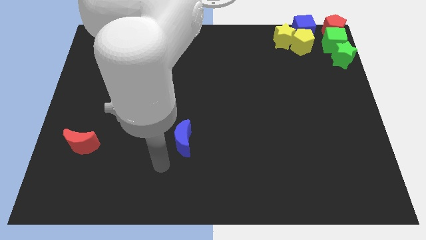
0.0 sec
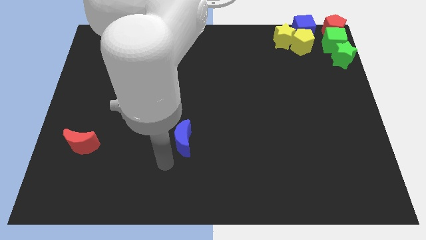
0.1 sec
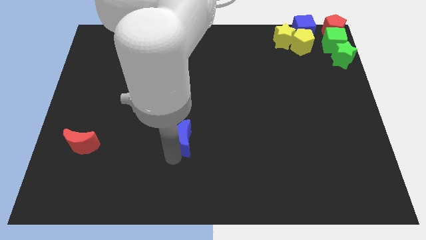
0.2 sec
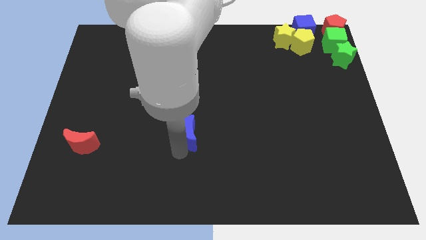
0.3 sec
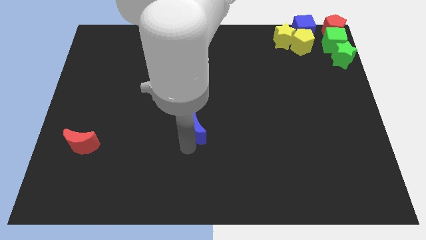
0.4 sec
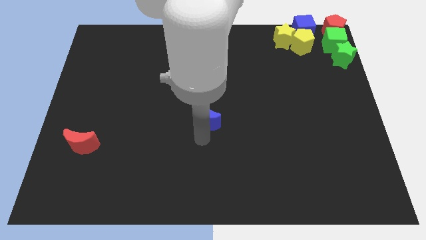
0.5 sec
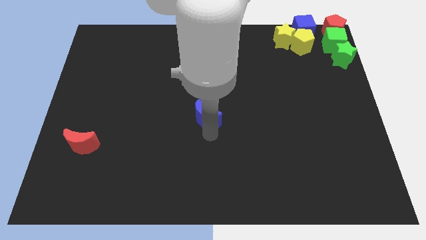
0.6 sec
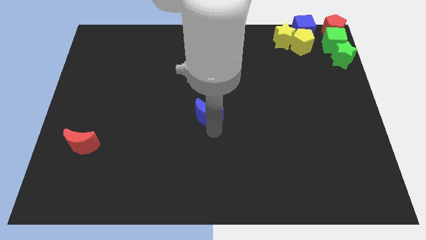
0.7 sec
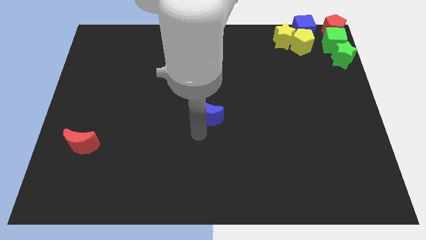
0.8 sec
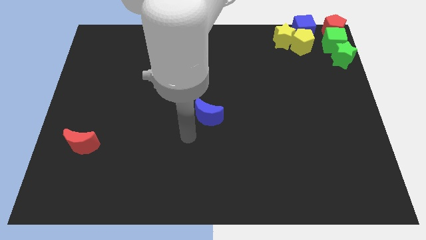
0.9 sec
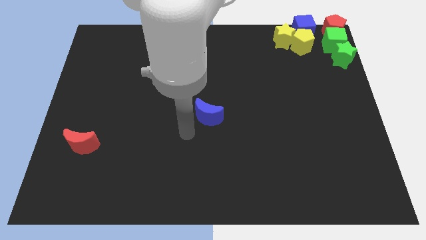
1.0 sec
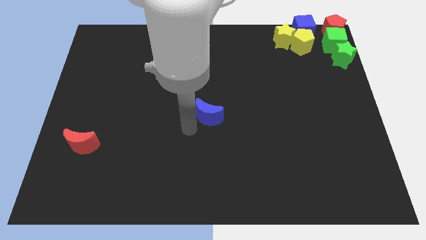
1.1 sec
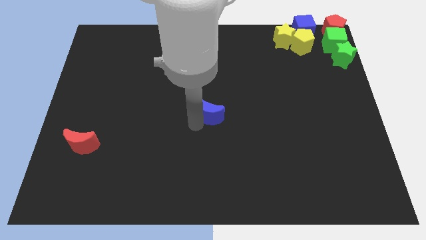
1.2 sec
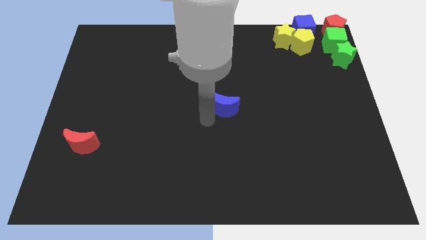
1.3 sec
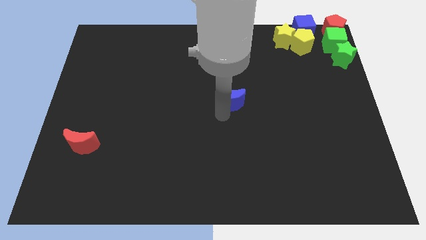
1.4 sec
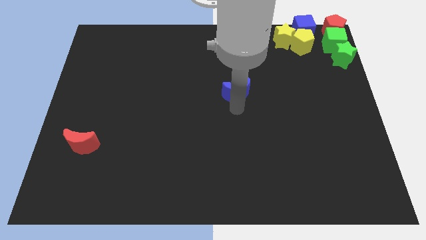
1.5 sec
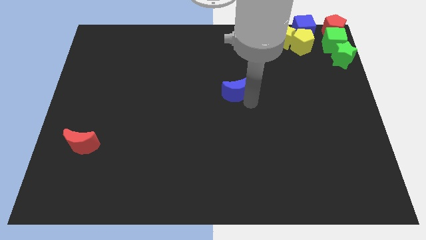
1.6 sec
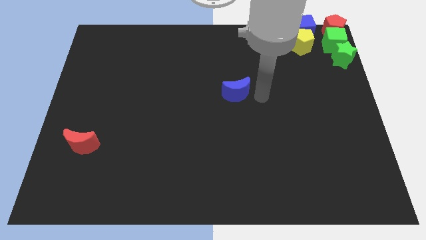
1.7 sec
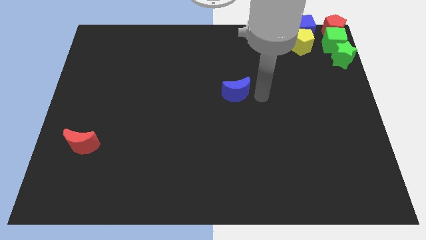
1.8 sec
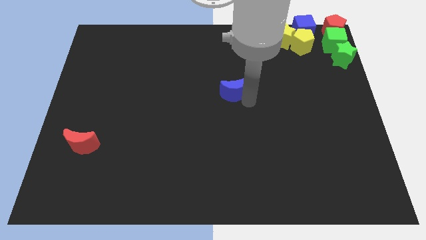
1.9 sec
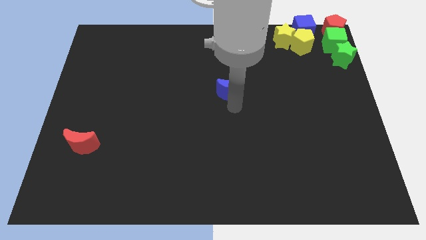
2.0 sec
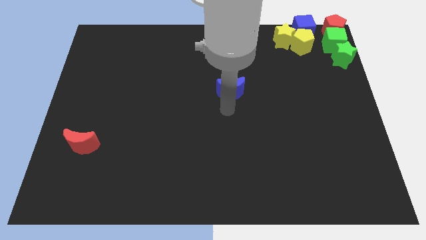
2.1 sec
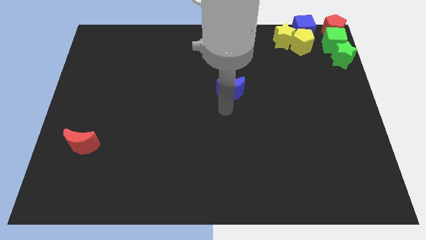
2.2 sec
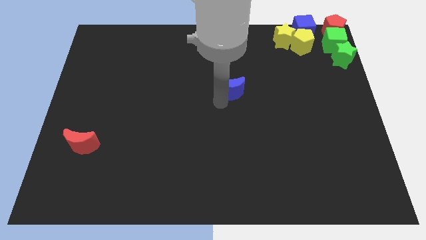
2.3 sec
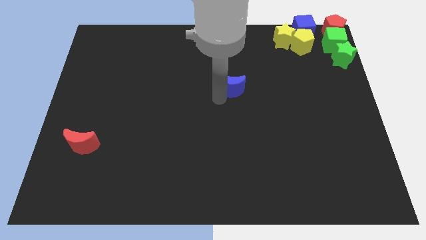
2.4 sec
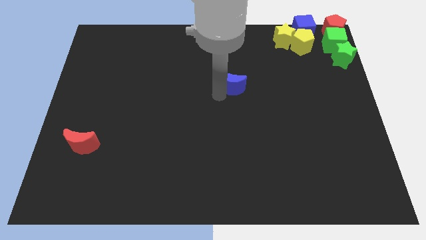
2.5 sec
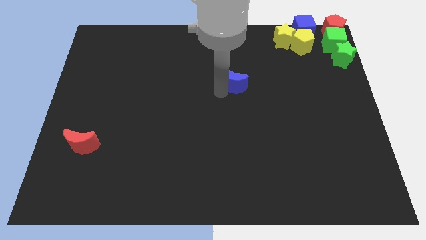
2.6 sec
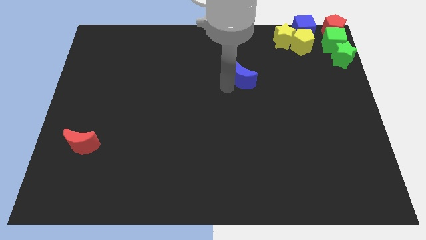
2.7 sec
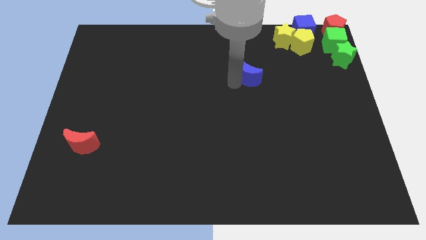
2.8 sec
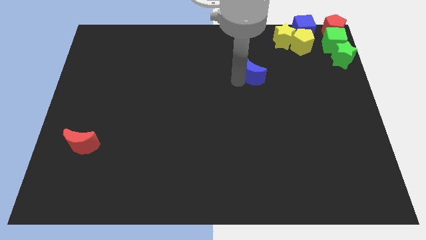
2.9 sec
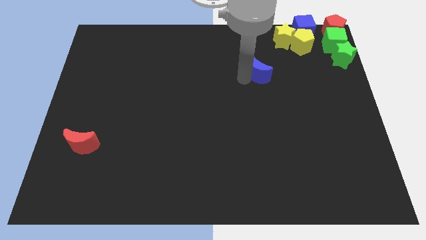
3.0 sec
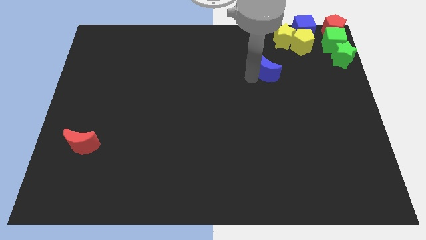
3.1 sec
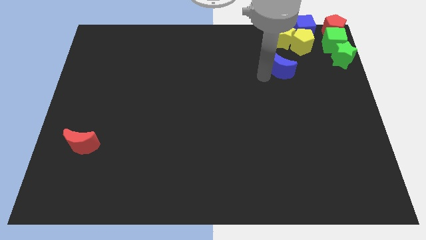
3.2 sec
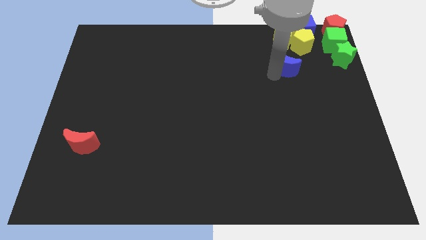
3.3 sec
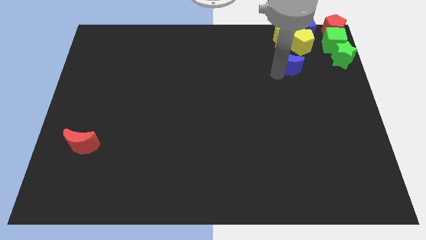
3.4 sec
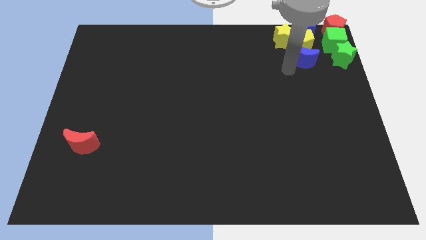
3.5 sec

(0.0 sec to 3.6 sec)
move the blue crescent to the bottom of the yellow pentagon to the top right of the board

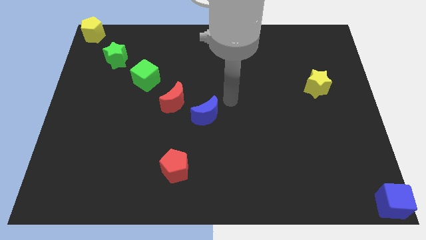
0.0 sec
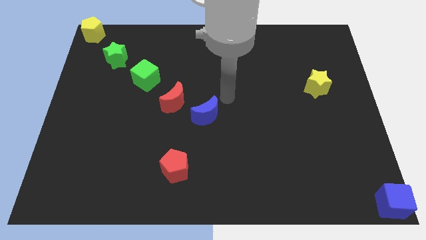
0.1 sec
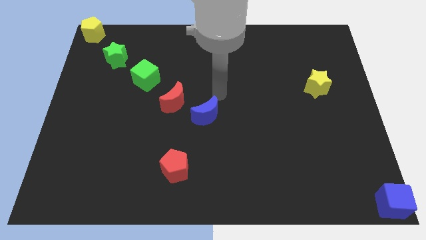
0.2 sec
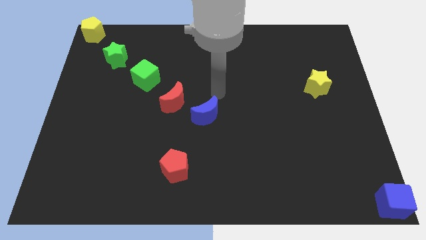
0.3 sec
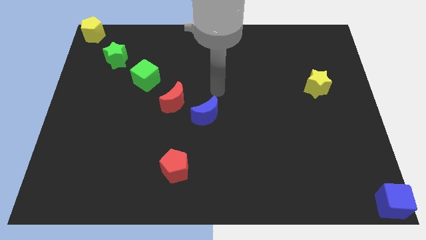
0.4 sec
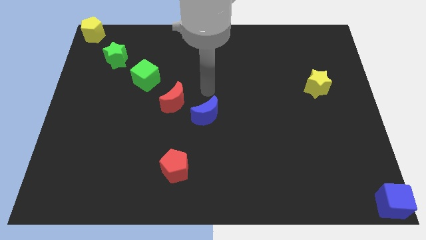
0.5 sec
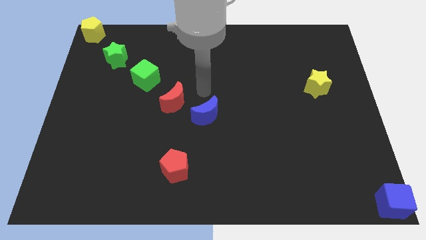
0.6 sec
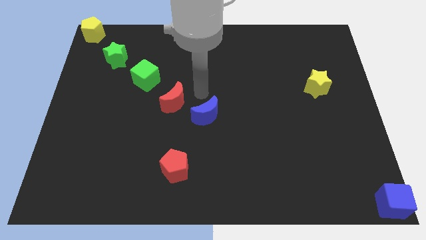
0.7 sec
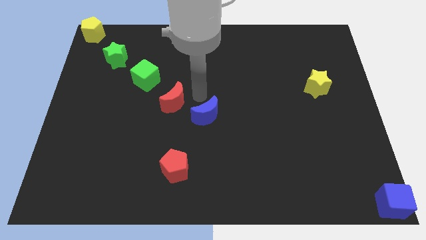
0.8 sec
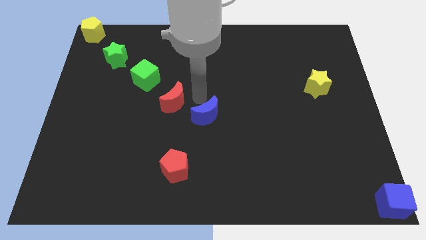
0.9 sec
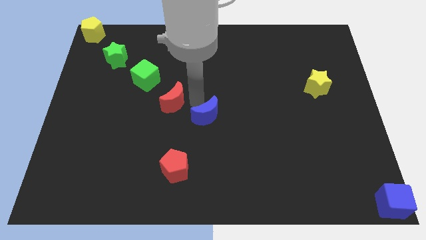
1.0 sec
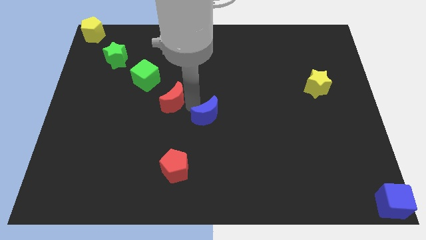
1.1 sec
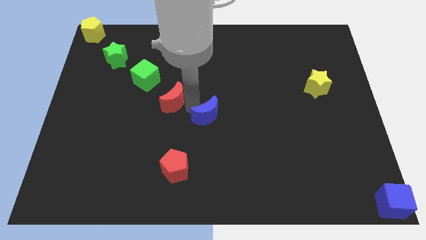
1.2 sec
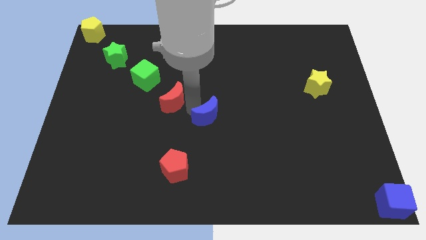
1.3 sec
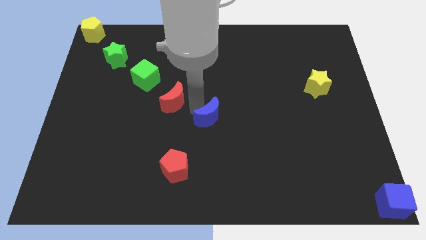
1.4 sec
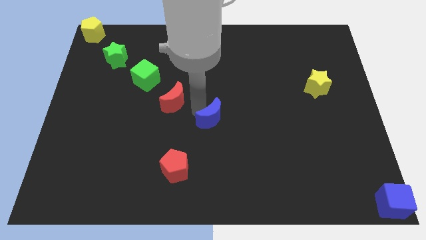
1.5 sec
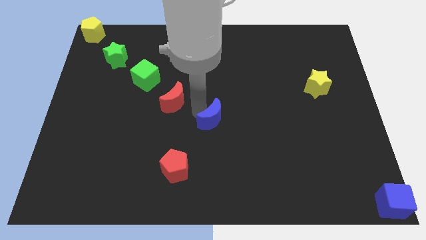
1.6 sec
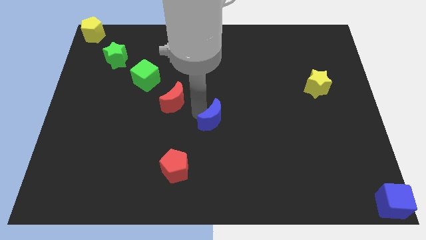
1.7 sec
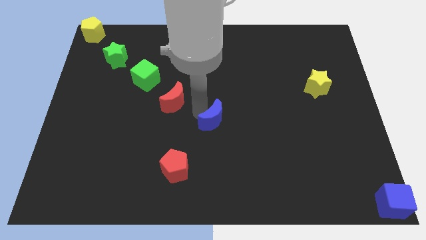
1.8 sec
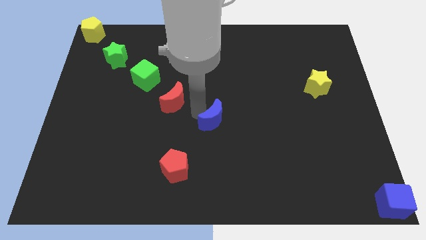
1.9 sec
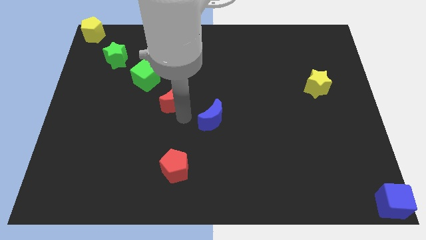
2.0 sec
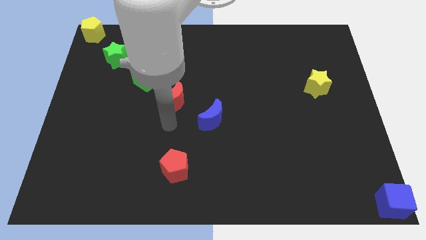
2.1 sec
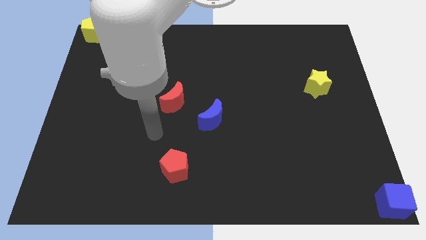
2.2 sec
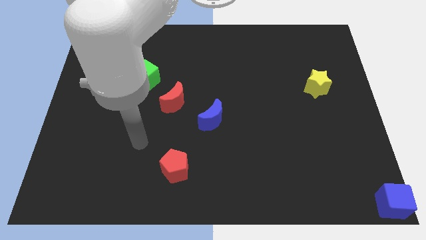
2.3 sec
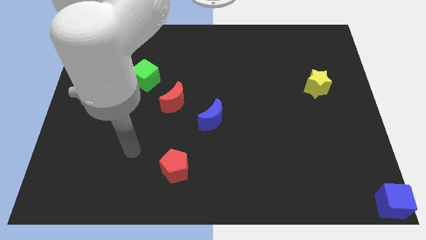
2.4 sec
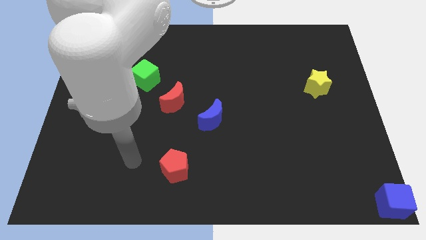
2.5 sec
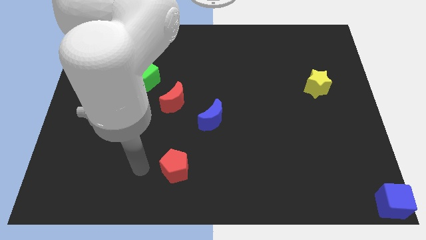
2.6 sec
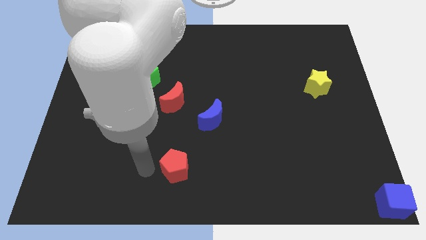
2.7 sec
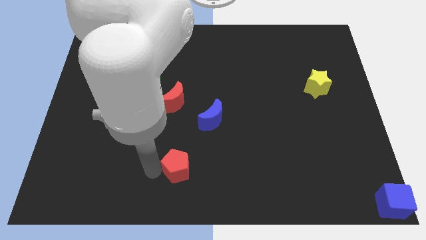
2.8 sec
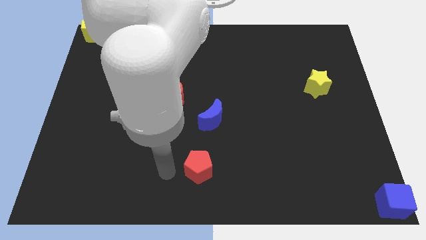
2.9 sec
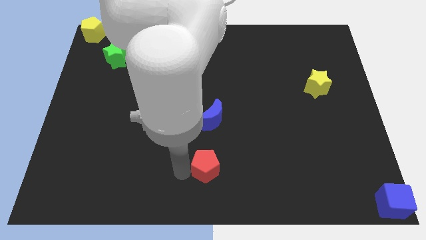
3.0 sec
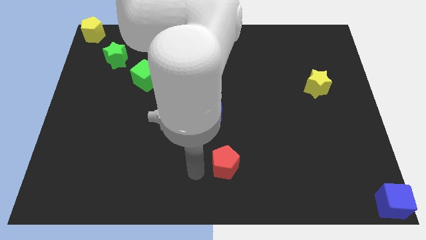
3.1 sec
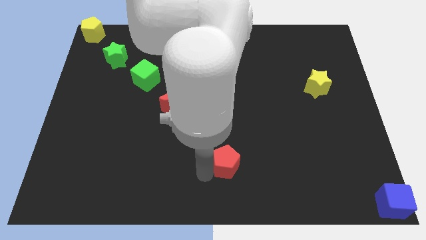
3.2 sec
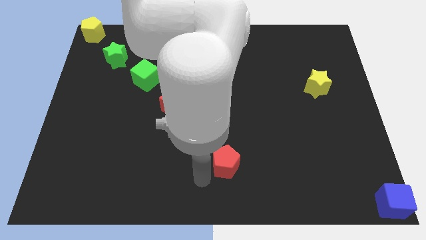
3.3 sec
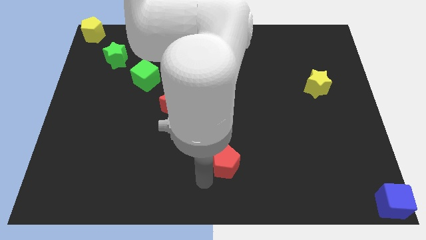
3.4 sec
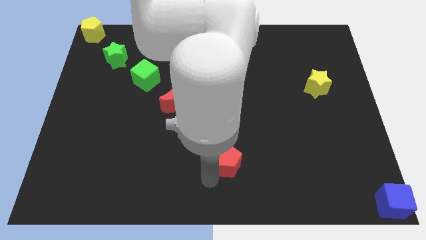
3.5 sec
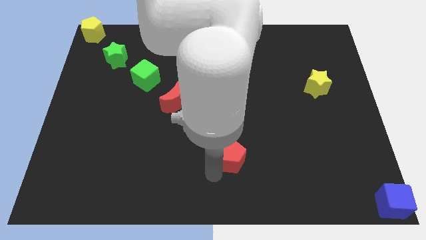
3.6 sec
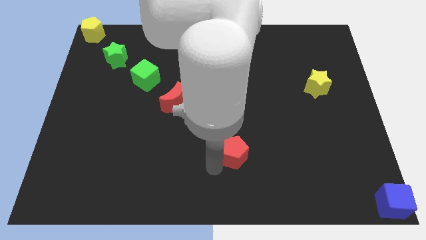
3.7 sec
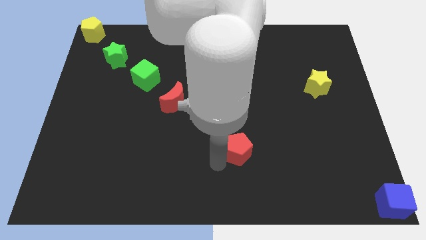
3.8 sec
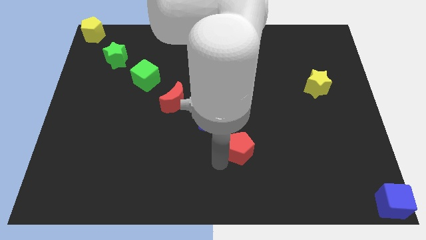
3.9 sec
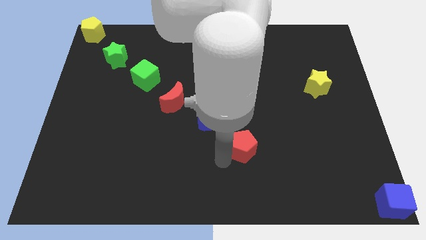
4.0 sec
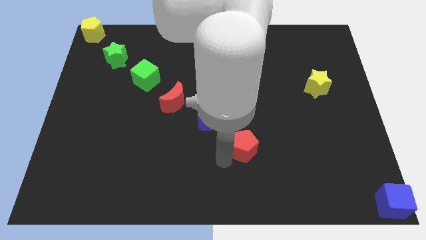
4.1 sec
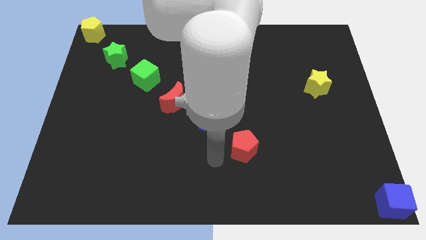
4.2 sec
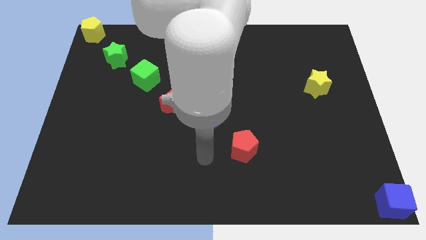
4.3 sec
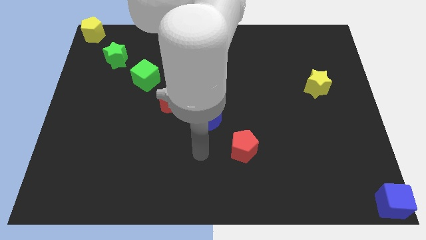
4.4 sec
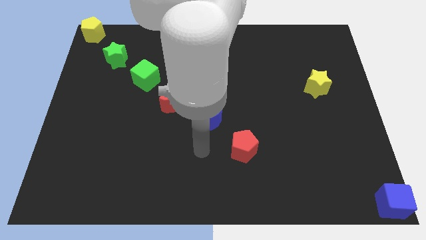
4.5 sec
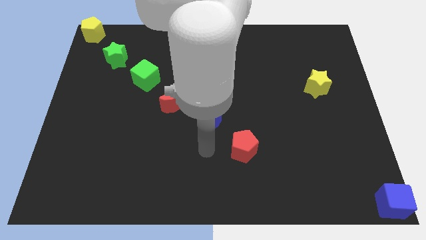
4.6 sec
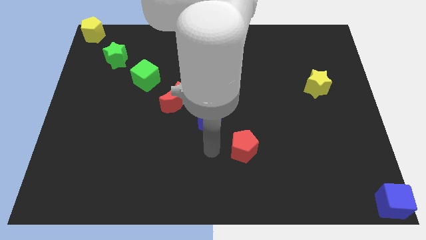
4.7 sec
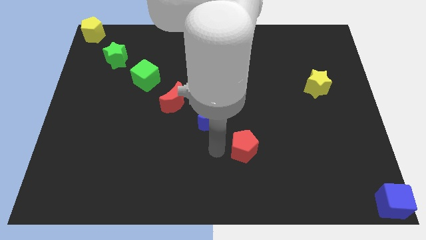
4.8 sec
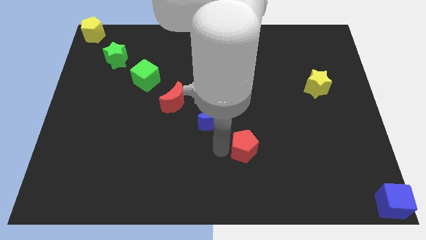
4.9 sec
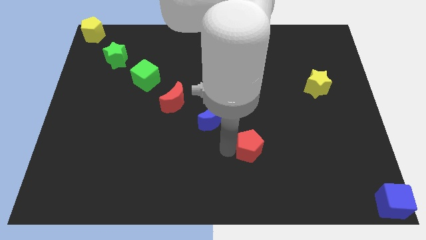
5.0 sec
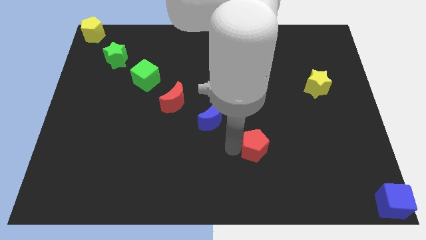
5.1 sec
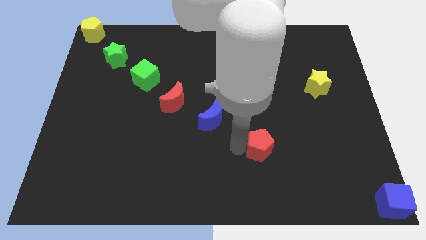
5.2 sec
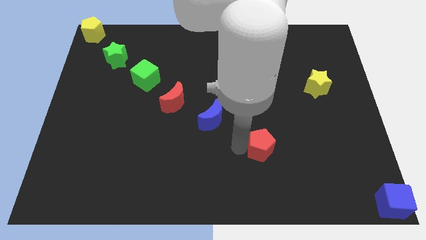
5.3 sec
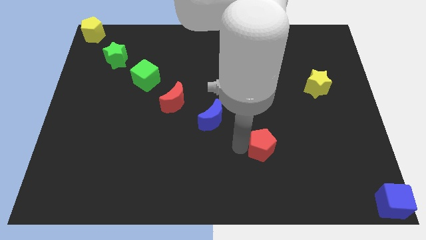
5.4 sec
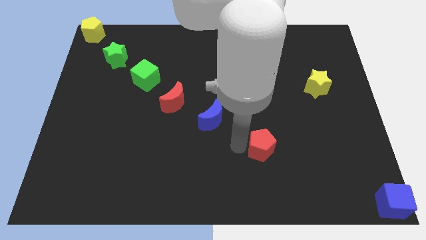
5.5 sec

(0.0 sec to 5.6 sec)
push red pentagon slightly upwards
